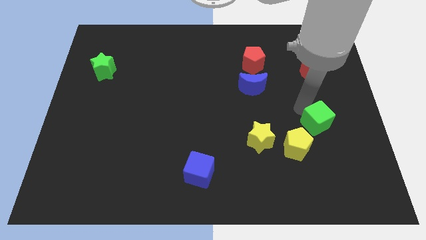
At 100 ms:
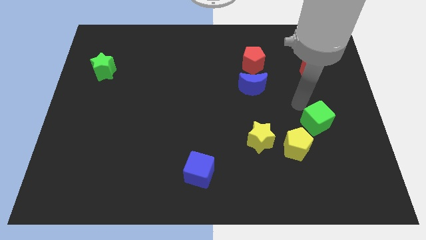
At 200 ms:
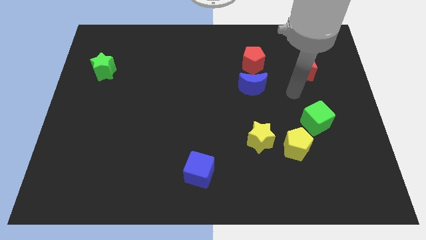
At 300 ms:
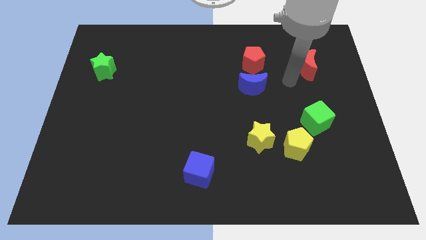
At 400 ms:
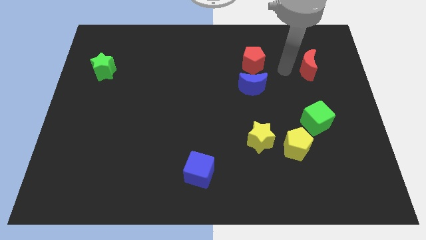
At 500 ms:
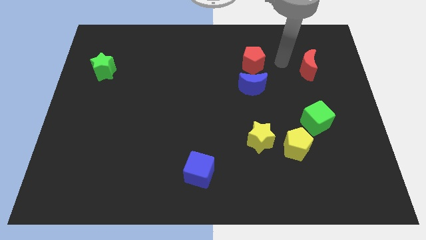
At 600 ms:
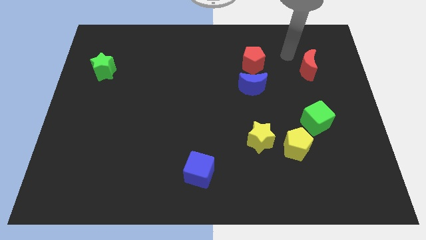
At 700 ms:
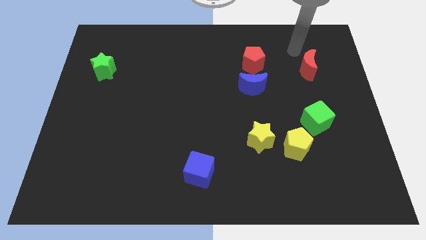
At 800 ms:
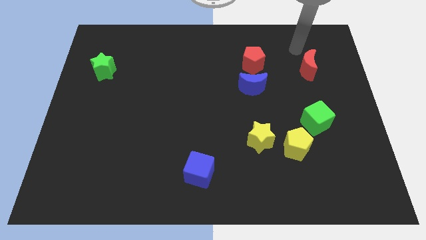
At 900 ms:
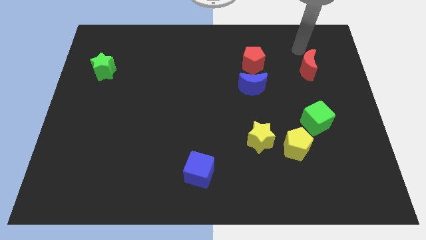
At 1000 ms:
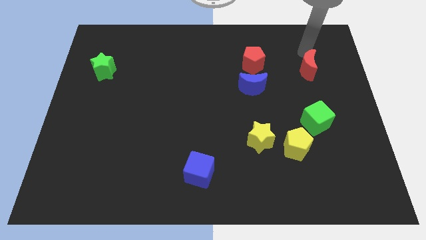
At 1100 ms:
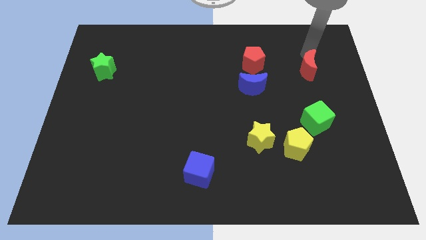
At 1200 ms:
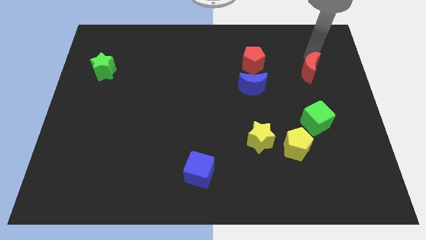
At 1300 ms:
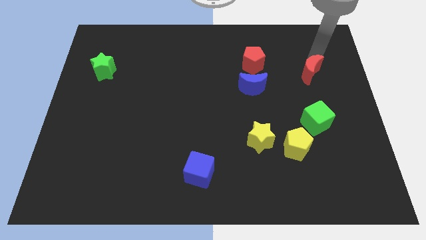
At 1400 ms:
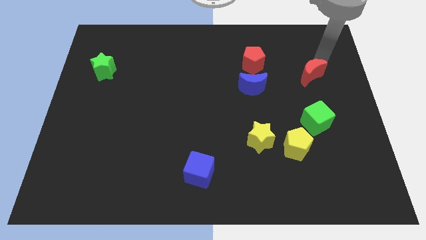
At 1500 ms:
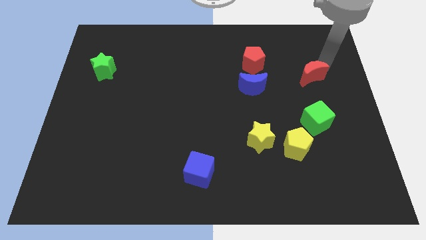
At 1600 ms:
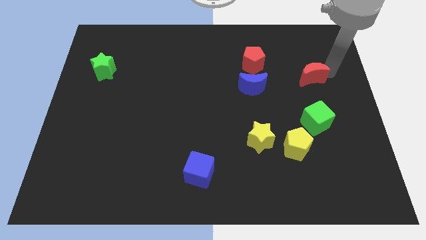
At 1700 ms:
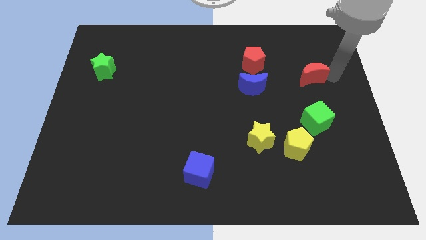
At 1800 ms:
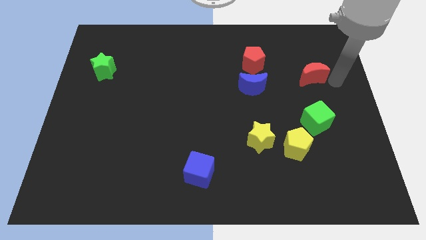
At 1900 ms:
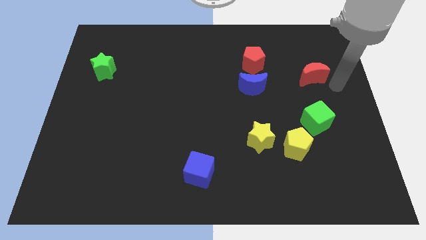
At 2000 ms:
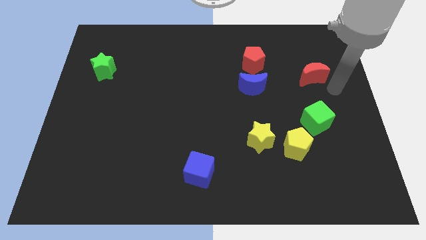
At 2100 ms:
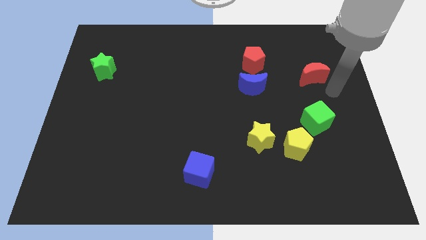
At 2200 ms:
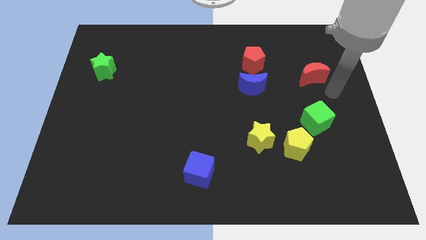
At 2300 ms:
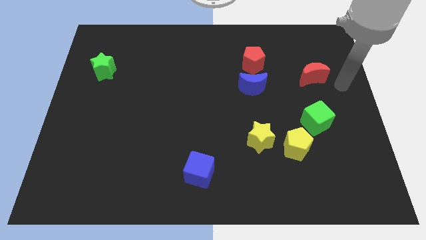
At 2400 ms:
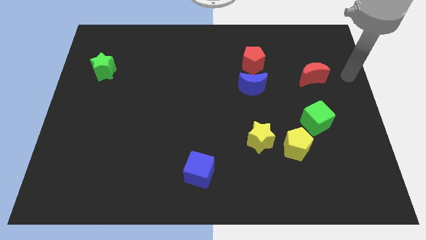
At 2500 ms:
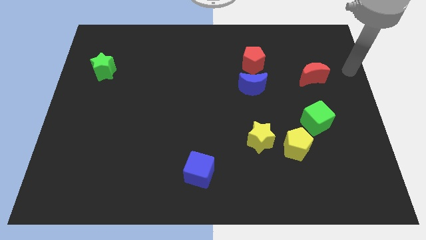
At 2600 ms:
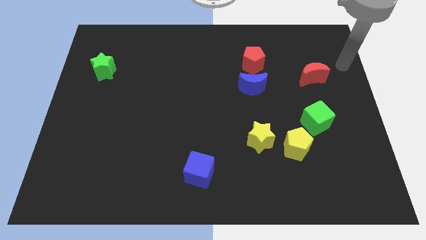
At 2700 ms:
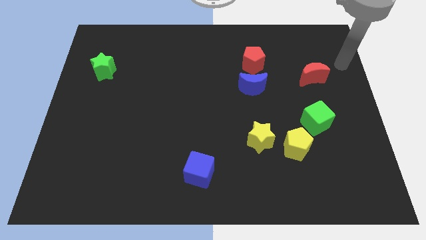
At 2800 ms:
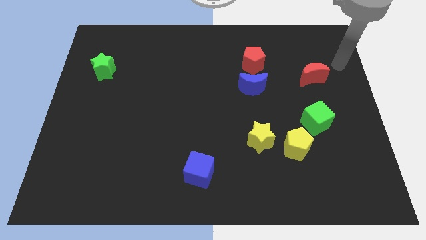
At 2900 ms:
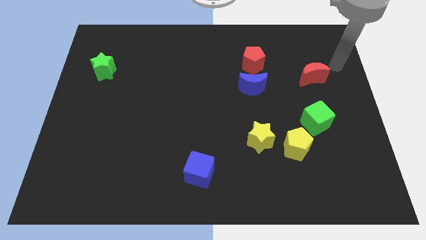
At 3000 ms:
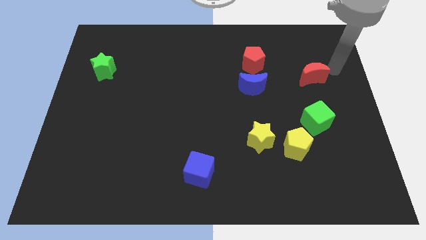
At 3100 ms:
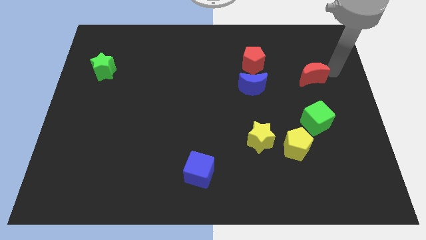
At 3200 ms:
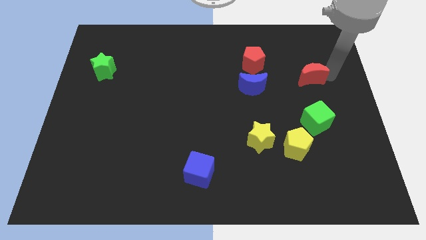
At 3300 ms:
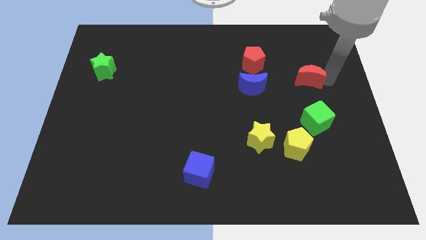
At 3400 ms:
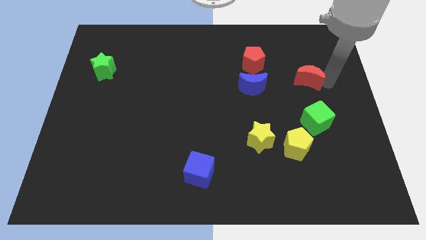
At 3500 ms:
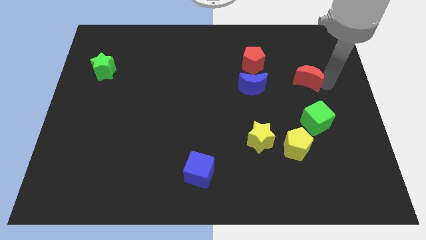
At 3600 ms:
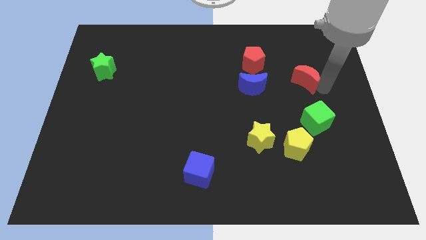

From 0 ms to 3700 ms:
push the red moon downwards

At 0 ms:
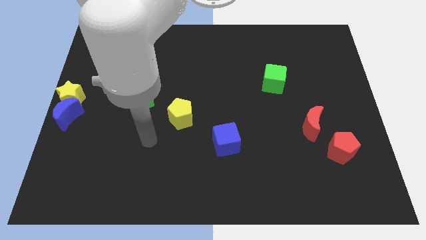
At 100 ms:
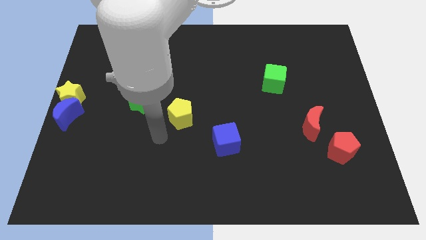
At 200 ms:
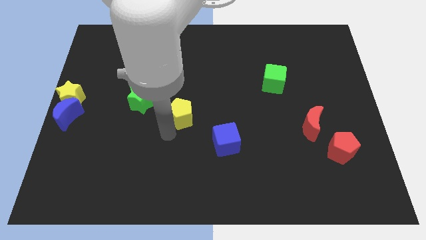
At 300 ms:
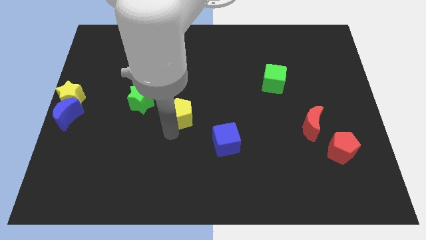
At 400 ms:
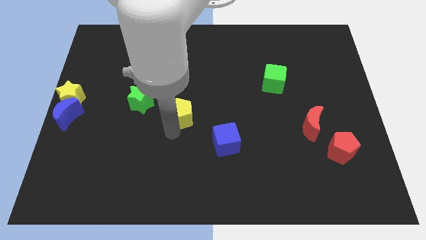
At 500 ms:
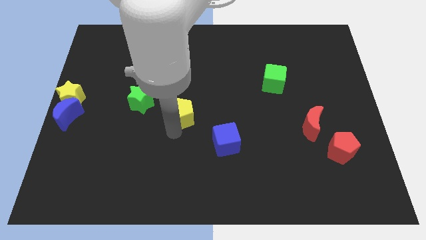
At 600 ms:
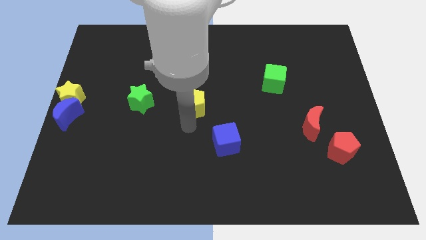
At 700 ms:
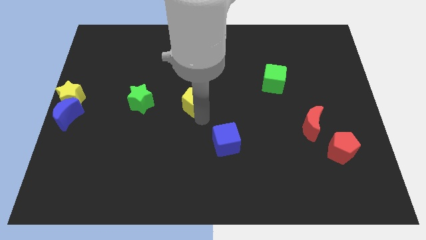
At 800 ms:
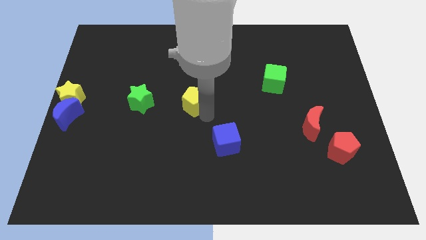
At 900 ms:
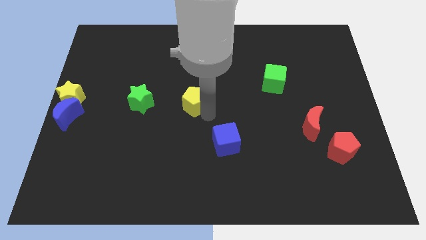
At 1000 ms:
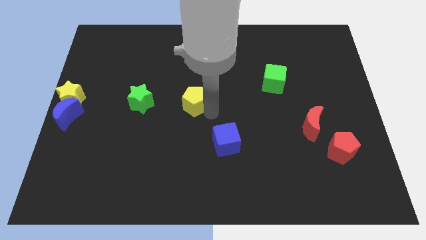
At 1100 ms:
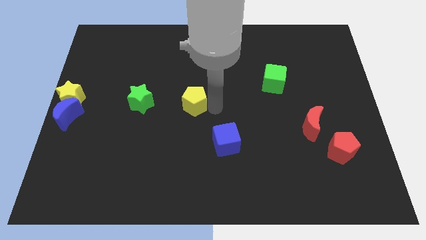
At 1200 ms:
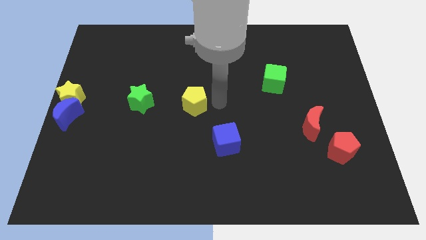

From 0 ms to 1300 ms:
put the yellow pentagon to the right side of the green star

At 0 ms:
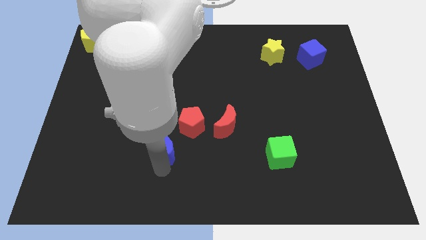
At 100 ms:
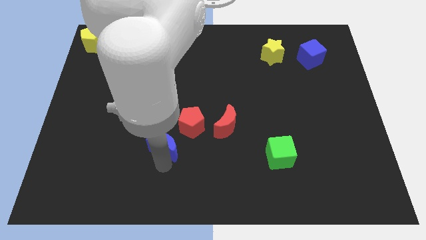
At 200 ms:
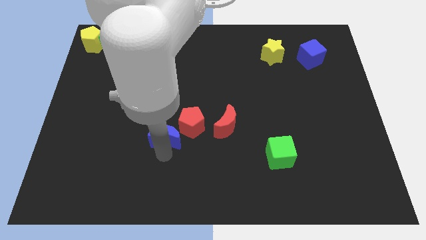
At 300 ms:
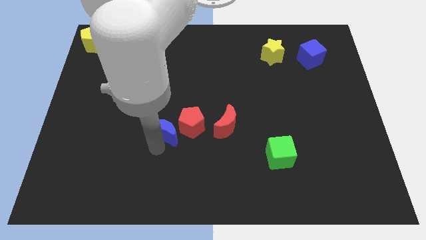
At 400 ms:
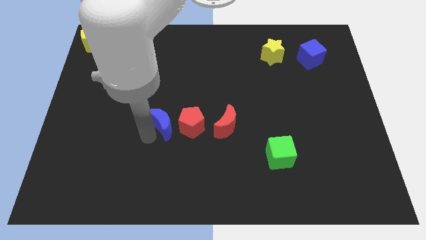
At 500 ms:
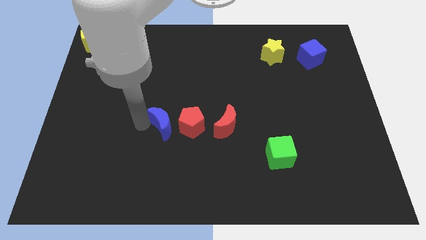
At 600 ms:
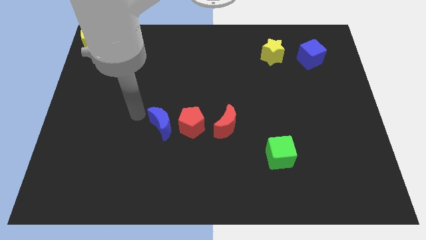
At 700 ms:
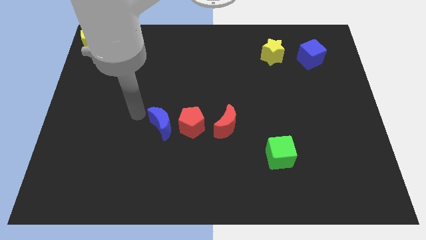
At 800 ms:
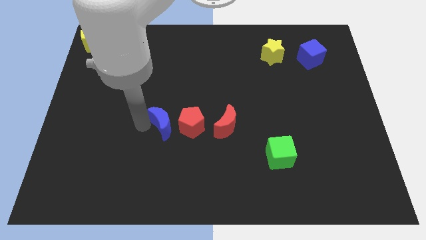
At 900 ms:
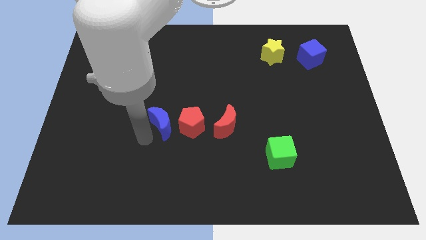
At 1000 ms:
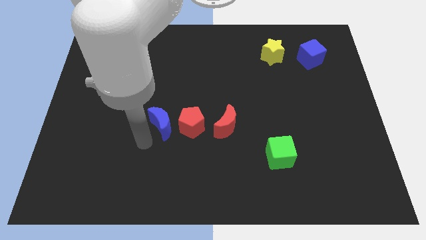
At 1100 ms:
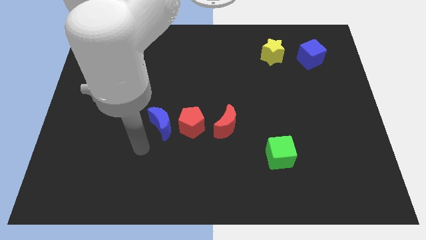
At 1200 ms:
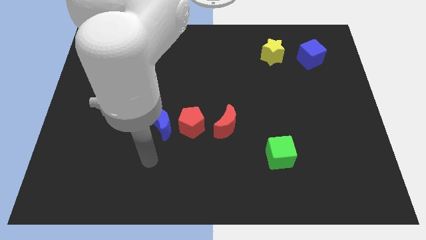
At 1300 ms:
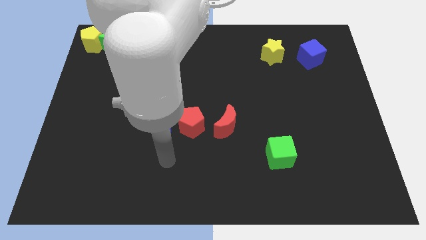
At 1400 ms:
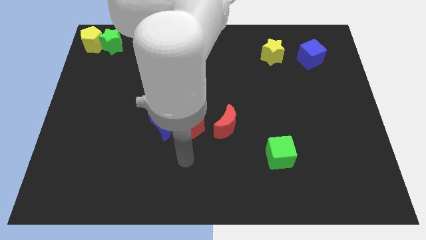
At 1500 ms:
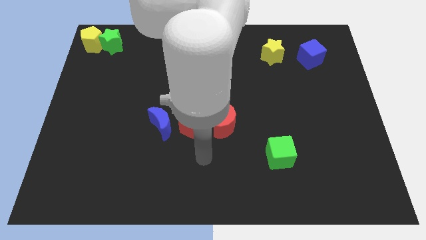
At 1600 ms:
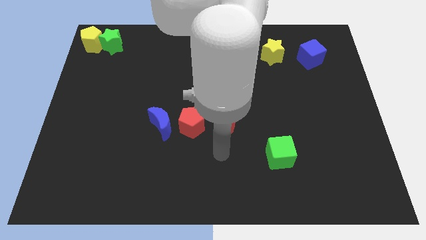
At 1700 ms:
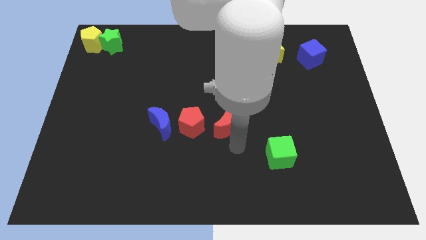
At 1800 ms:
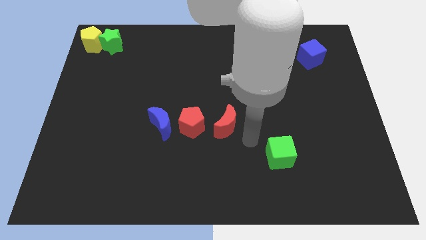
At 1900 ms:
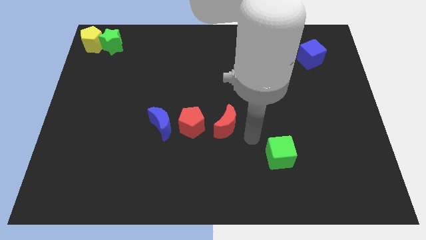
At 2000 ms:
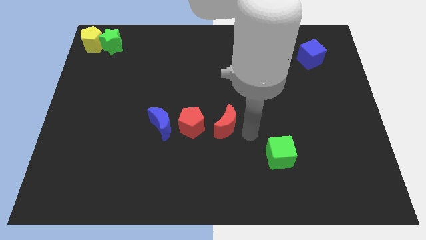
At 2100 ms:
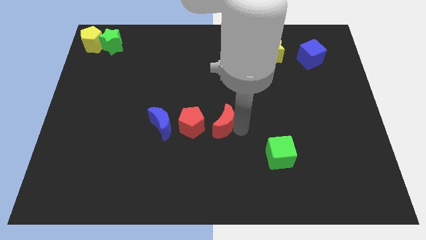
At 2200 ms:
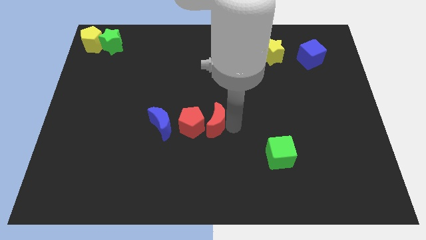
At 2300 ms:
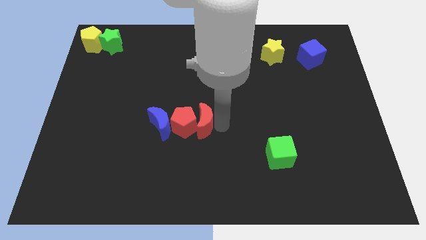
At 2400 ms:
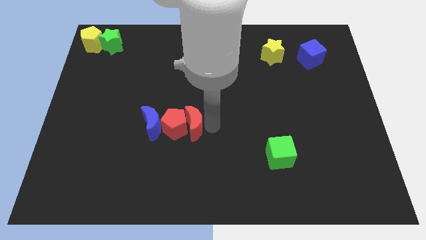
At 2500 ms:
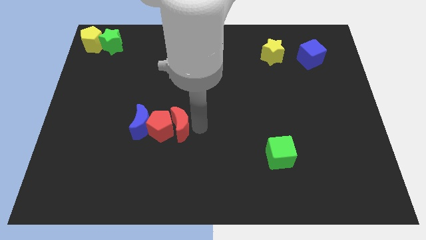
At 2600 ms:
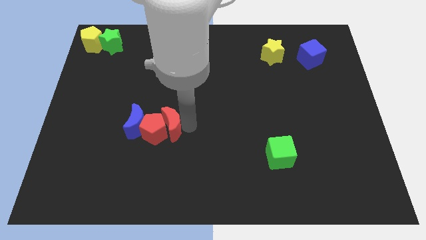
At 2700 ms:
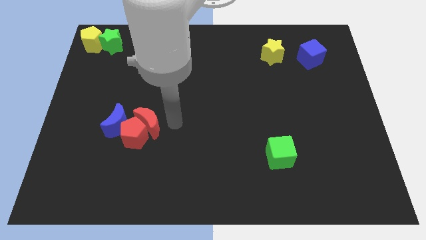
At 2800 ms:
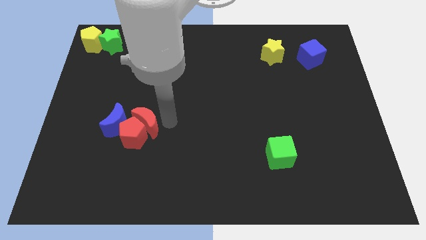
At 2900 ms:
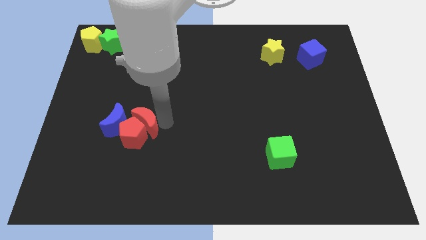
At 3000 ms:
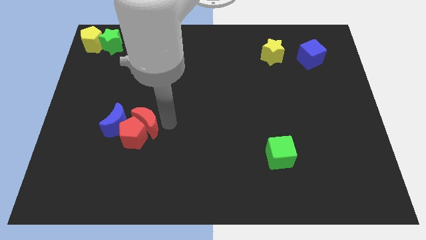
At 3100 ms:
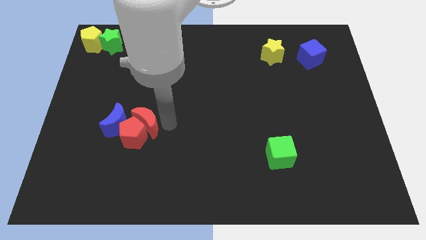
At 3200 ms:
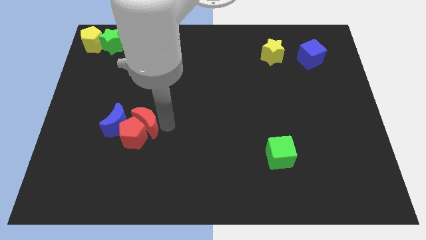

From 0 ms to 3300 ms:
push the red moon into the red pentagon

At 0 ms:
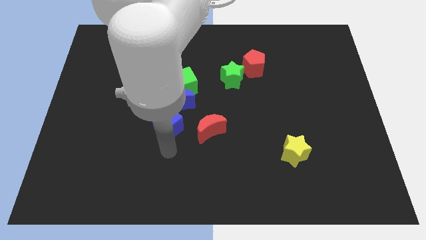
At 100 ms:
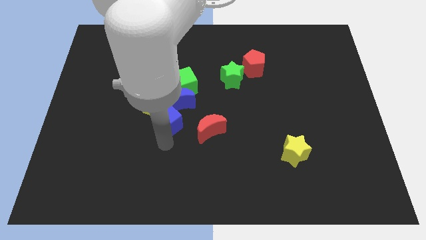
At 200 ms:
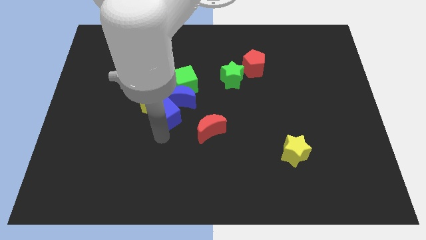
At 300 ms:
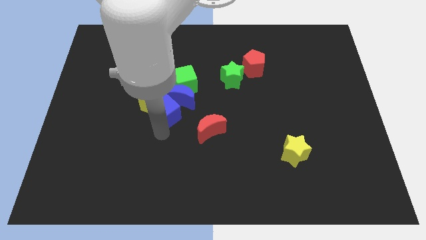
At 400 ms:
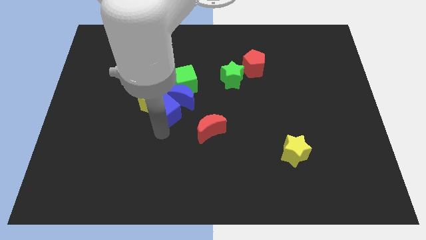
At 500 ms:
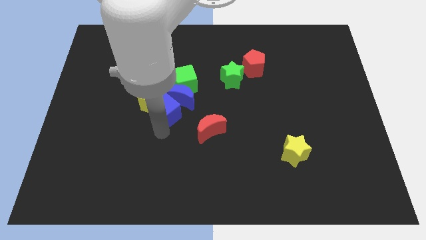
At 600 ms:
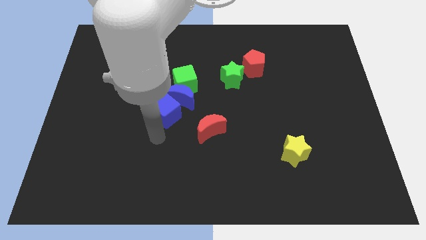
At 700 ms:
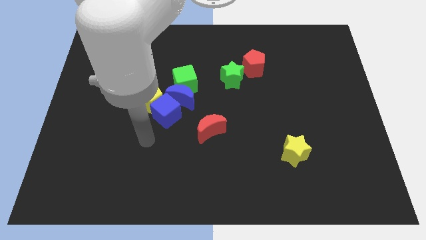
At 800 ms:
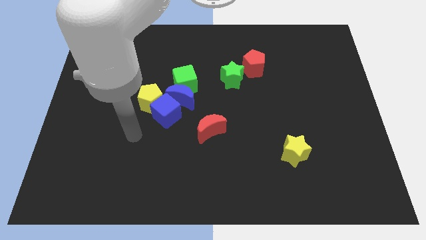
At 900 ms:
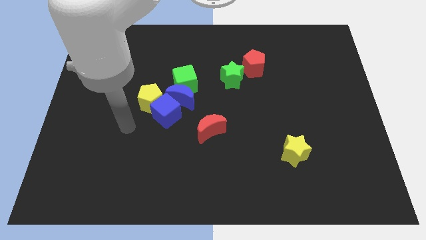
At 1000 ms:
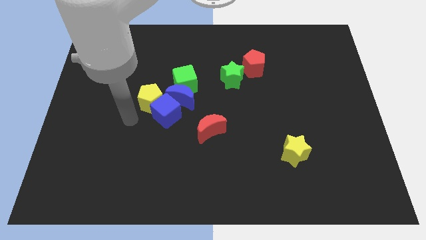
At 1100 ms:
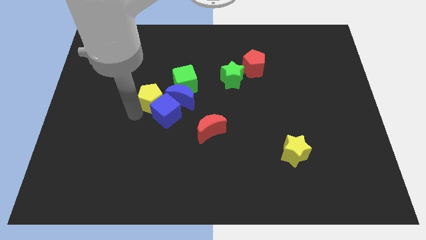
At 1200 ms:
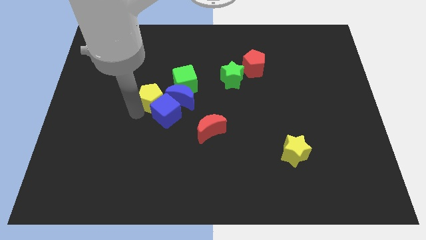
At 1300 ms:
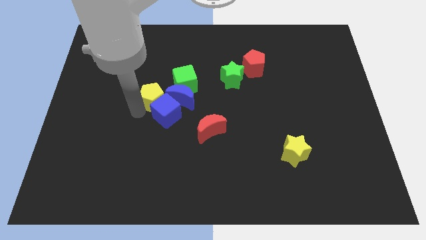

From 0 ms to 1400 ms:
push the blue cube into the blue crescent
